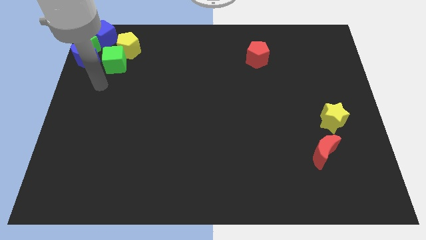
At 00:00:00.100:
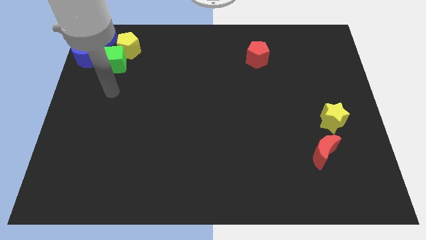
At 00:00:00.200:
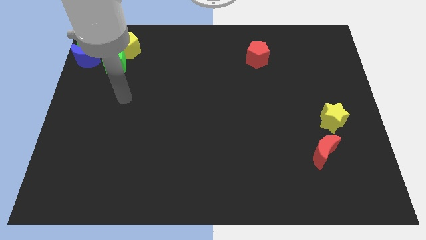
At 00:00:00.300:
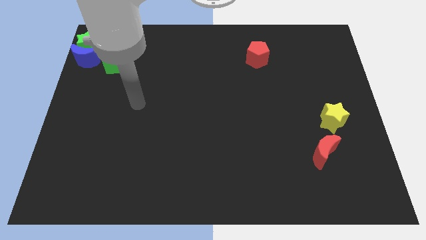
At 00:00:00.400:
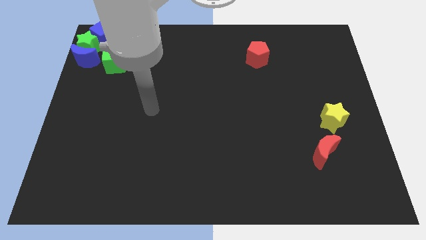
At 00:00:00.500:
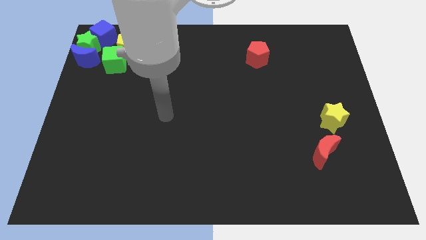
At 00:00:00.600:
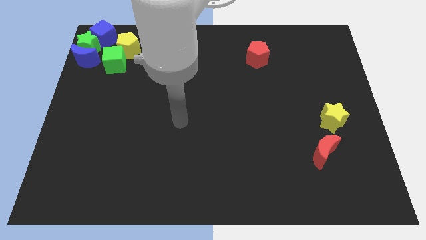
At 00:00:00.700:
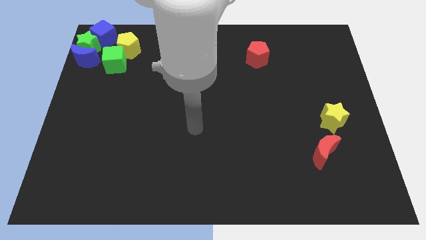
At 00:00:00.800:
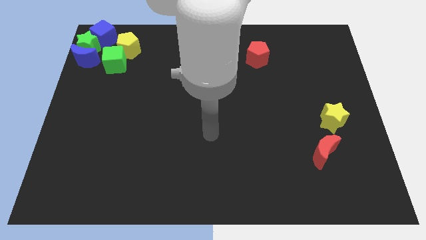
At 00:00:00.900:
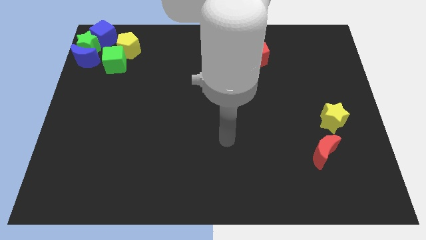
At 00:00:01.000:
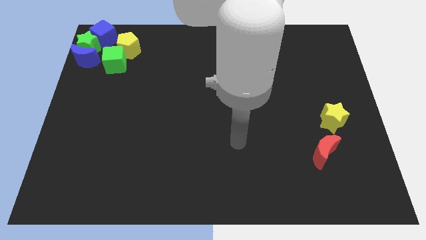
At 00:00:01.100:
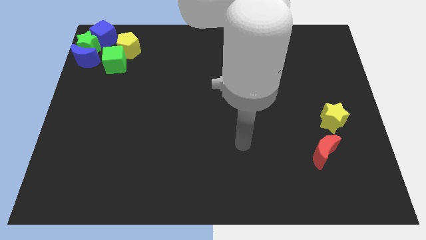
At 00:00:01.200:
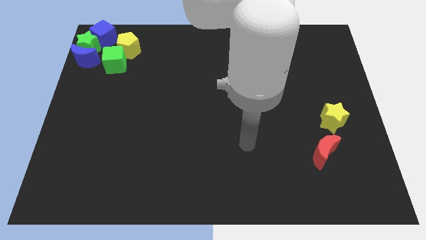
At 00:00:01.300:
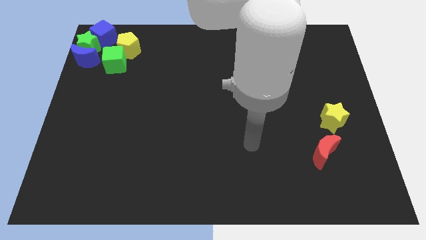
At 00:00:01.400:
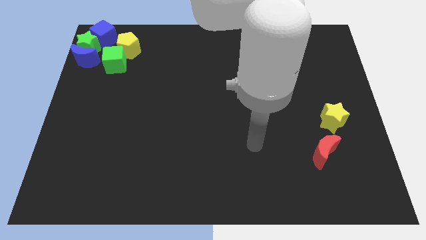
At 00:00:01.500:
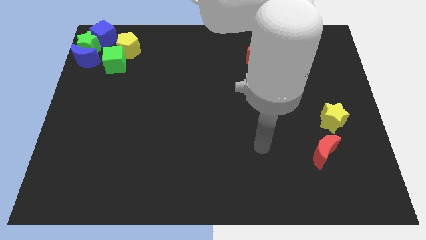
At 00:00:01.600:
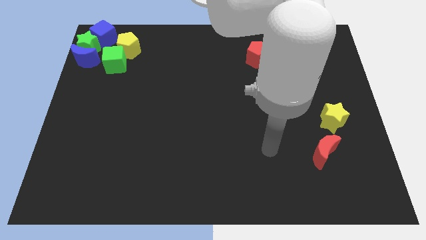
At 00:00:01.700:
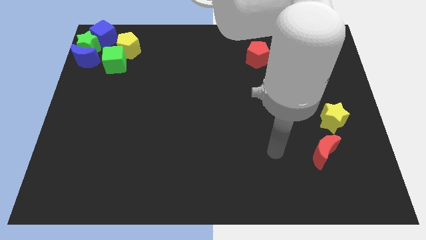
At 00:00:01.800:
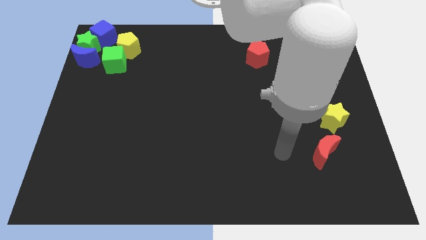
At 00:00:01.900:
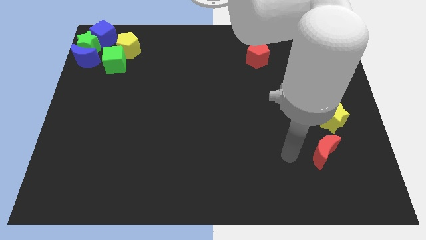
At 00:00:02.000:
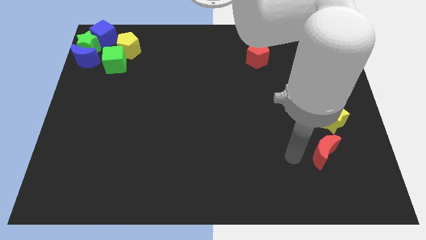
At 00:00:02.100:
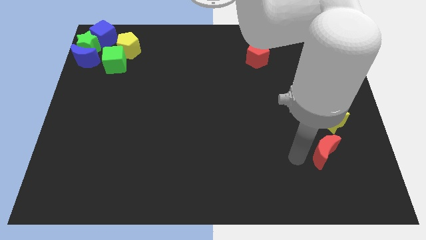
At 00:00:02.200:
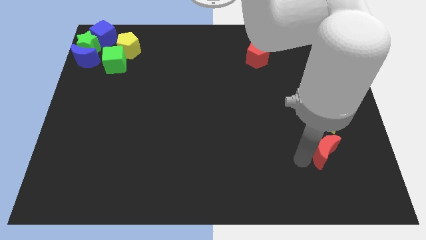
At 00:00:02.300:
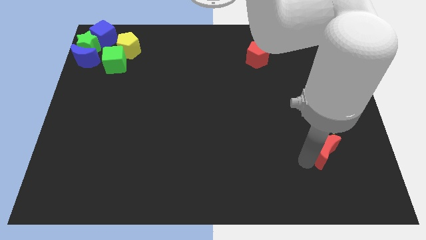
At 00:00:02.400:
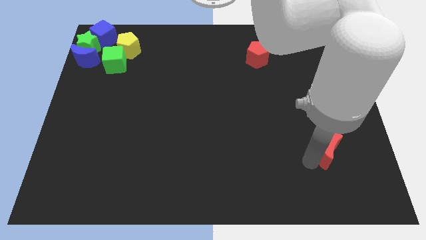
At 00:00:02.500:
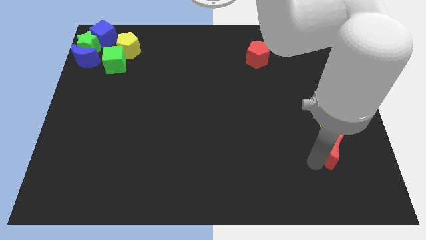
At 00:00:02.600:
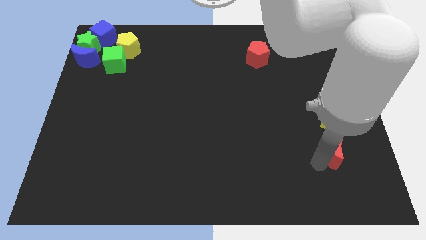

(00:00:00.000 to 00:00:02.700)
touch the left side of the red moon

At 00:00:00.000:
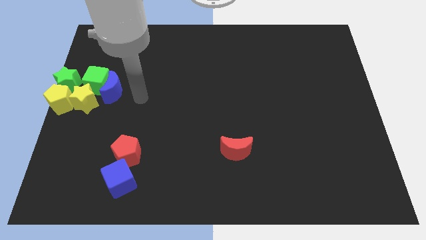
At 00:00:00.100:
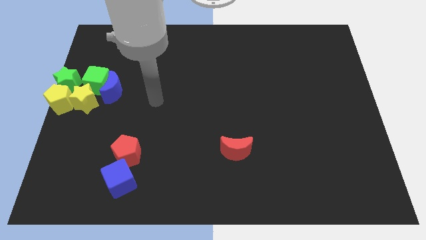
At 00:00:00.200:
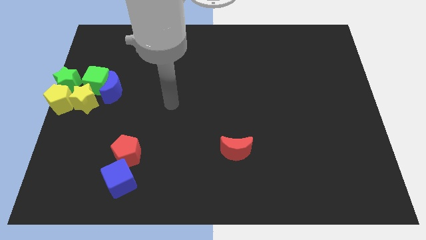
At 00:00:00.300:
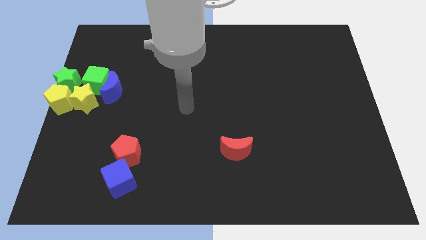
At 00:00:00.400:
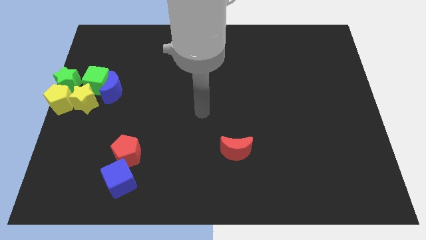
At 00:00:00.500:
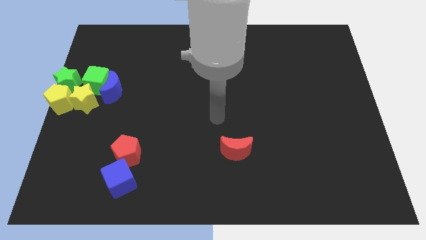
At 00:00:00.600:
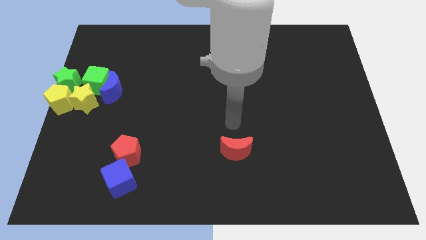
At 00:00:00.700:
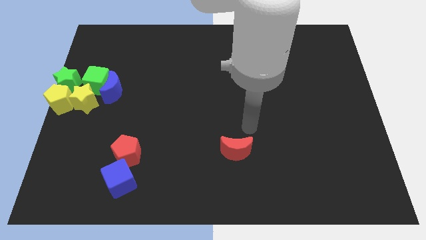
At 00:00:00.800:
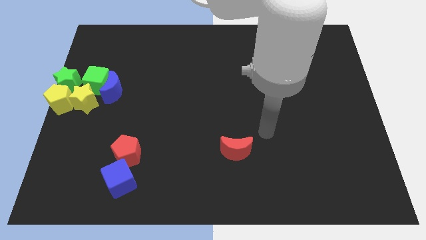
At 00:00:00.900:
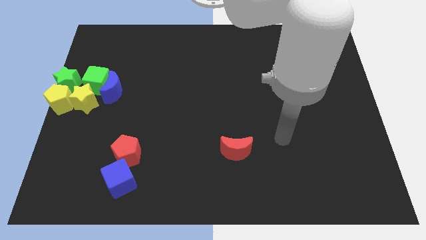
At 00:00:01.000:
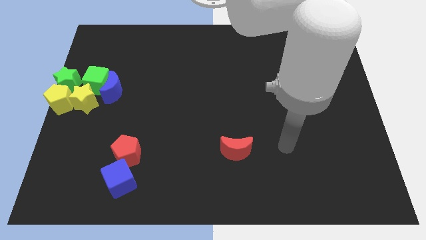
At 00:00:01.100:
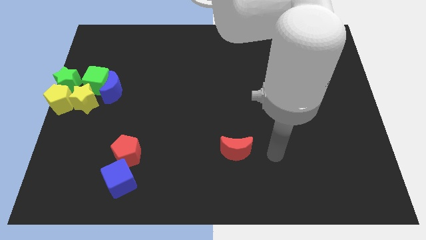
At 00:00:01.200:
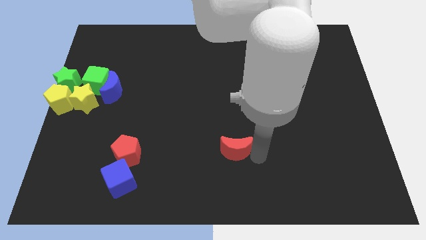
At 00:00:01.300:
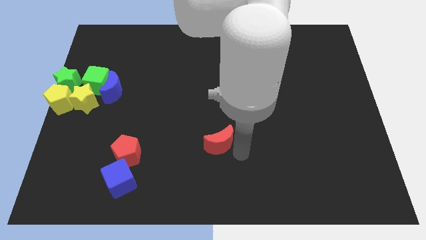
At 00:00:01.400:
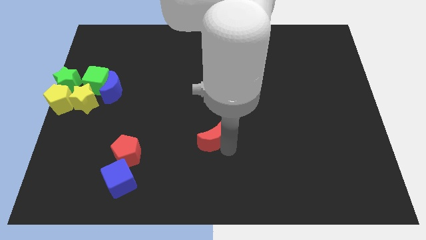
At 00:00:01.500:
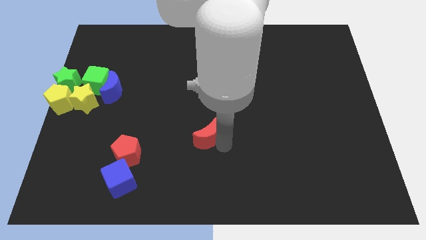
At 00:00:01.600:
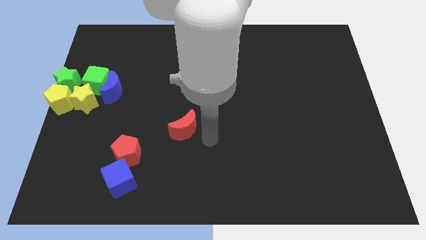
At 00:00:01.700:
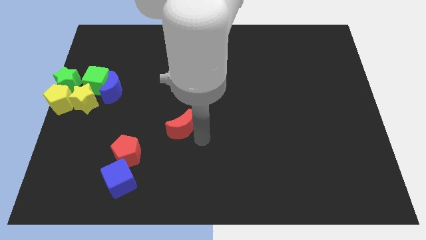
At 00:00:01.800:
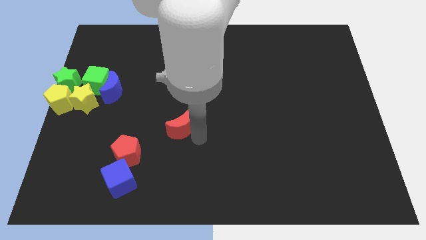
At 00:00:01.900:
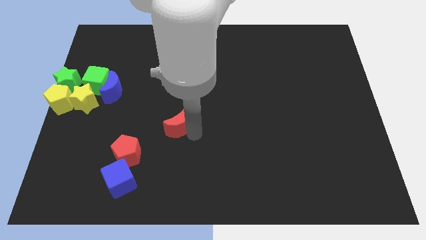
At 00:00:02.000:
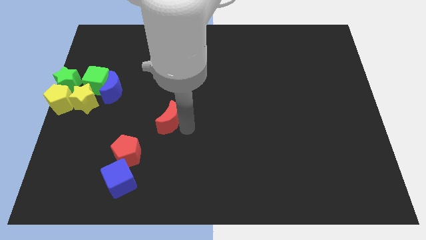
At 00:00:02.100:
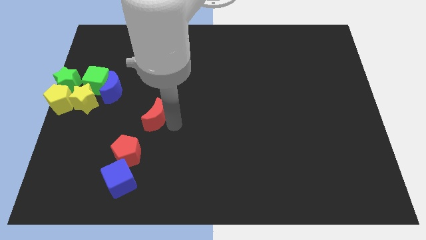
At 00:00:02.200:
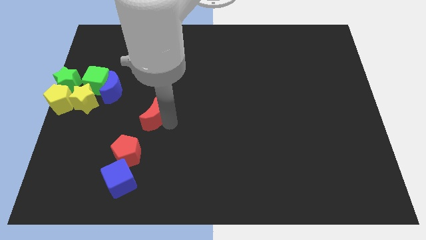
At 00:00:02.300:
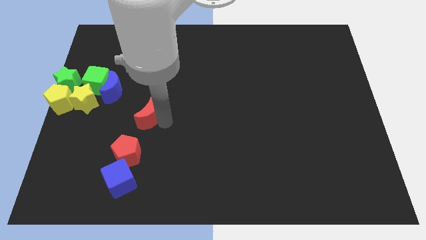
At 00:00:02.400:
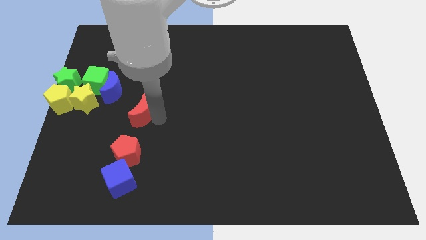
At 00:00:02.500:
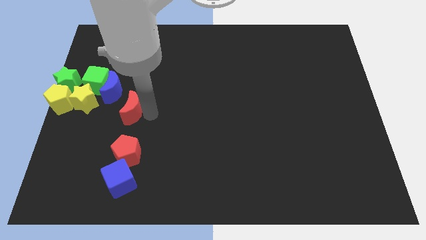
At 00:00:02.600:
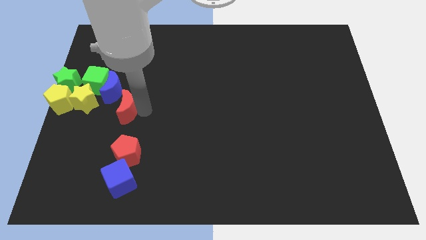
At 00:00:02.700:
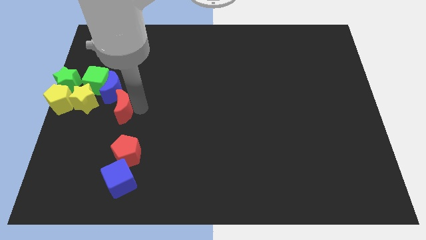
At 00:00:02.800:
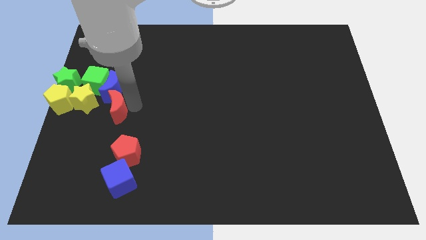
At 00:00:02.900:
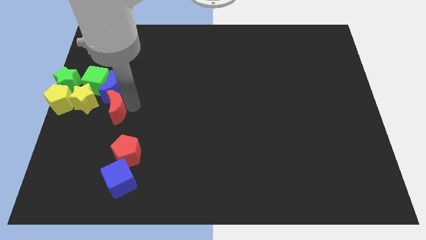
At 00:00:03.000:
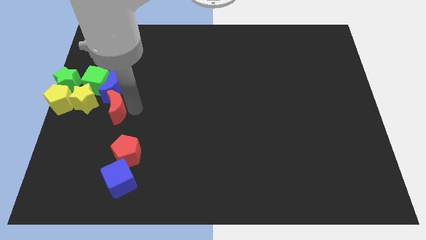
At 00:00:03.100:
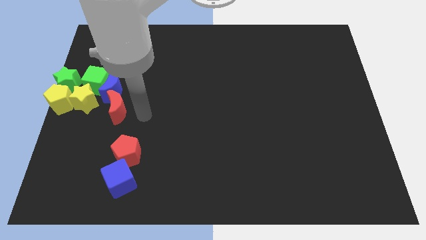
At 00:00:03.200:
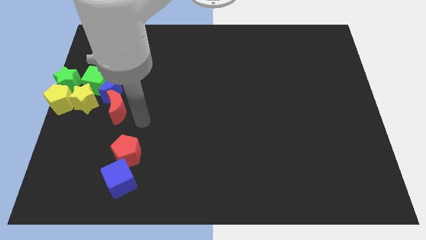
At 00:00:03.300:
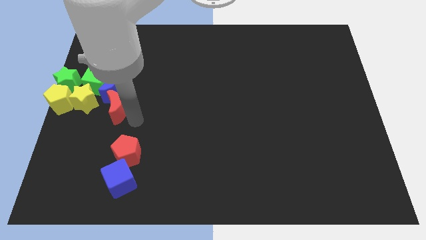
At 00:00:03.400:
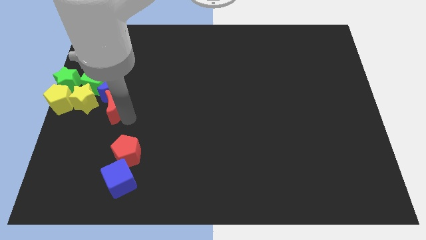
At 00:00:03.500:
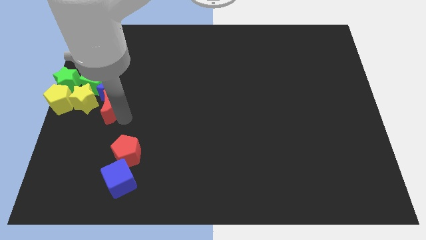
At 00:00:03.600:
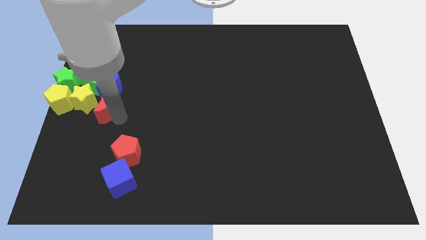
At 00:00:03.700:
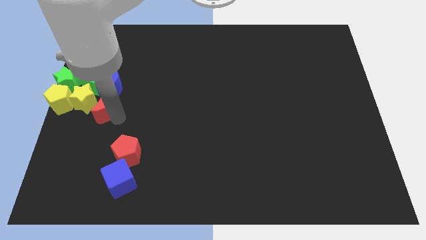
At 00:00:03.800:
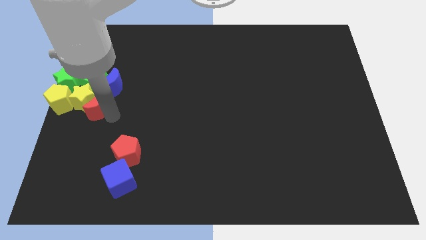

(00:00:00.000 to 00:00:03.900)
move the red crescent to the right of the yellow star

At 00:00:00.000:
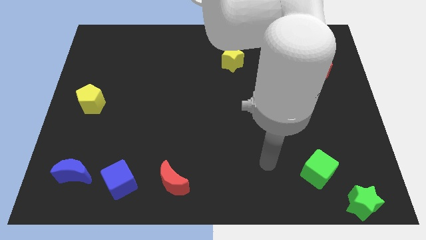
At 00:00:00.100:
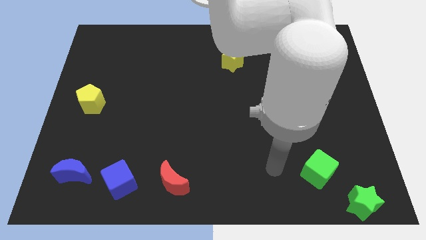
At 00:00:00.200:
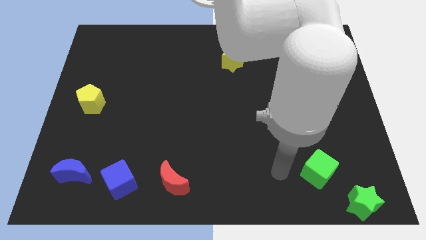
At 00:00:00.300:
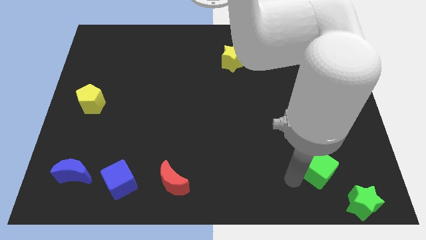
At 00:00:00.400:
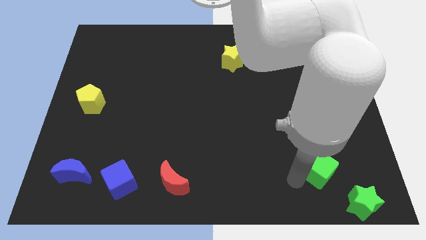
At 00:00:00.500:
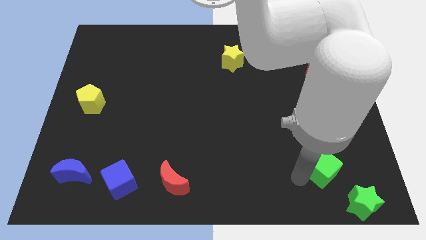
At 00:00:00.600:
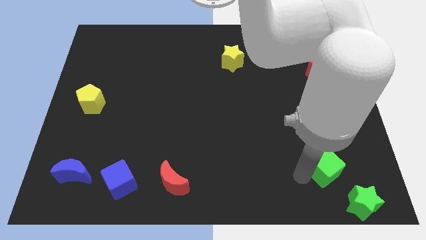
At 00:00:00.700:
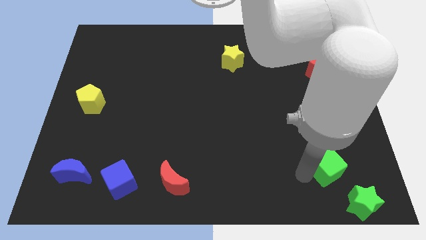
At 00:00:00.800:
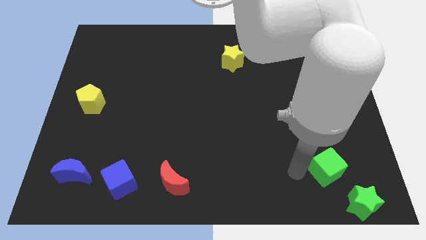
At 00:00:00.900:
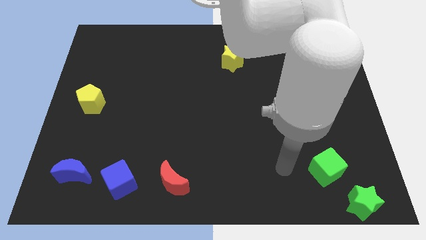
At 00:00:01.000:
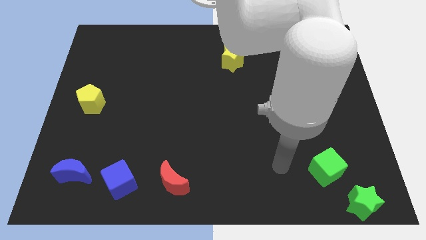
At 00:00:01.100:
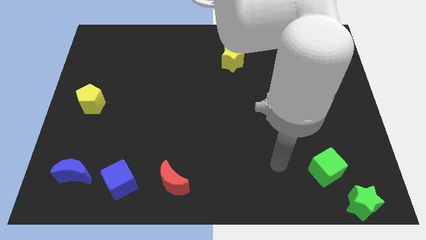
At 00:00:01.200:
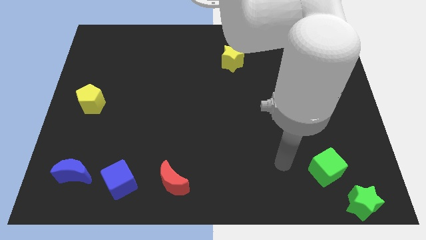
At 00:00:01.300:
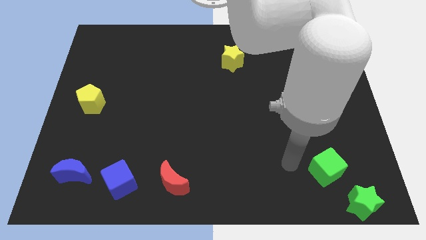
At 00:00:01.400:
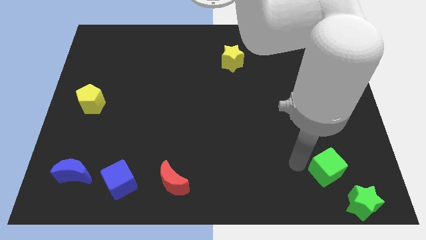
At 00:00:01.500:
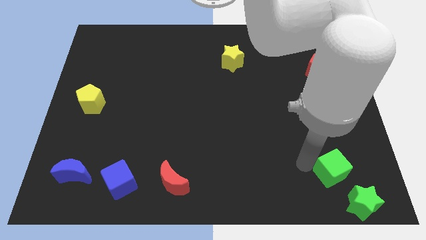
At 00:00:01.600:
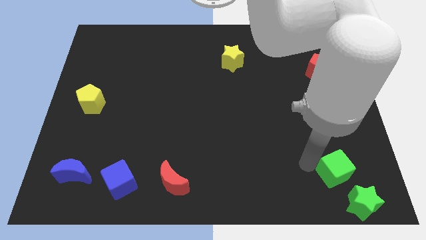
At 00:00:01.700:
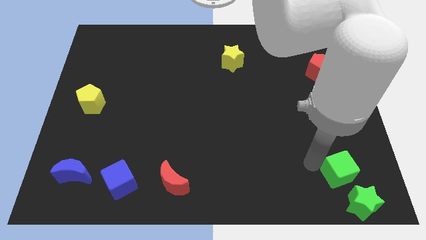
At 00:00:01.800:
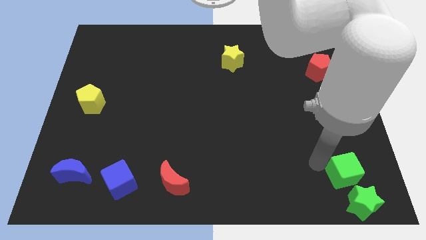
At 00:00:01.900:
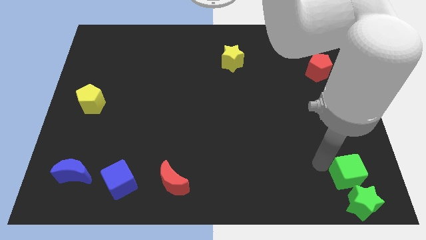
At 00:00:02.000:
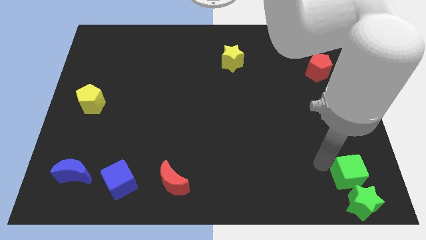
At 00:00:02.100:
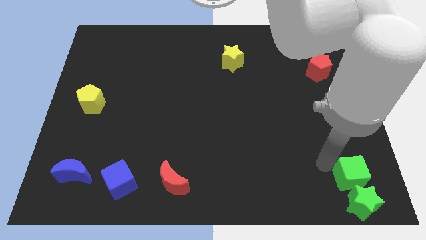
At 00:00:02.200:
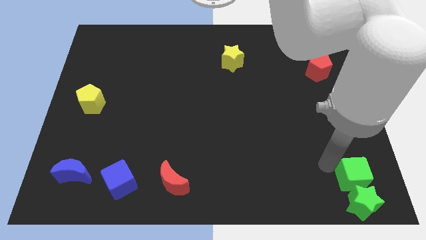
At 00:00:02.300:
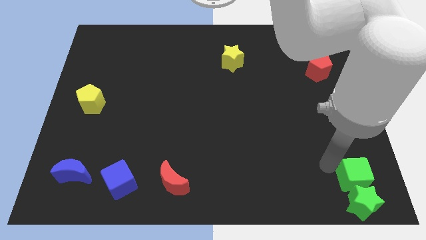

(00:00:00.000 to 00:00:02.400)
place the green cube above the green star
